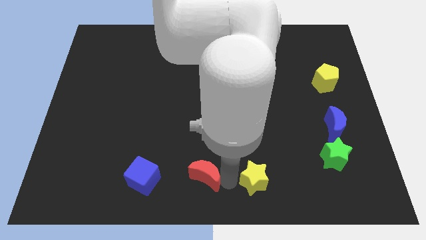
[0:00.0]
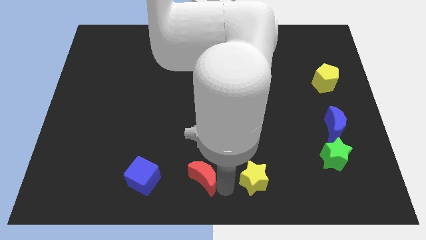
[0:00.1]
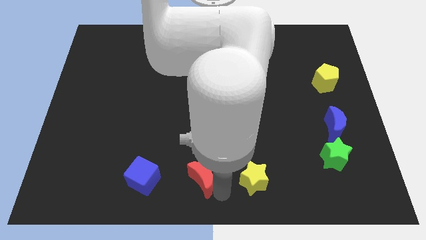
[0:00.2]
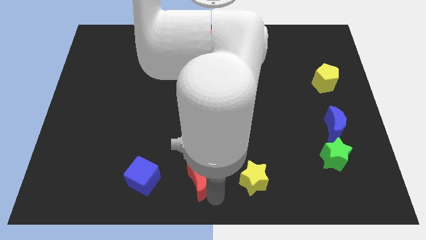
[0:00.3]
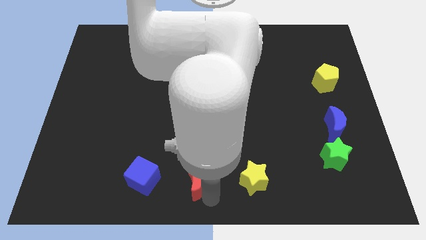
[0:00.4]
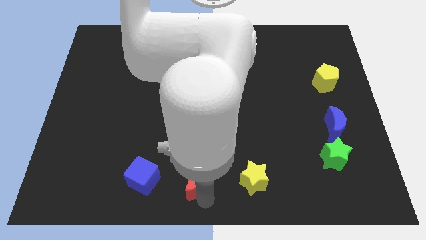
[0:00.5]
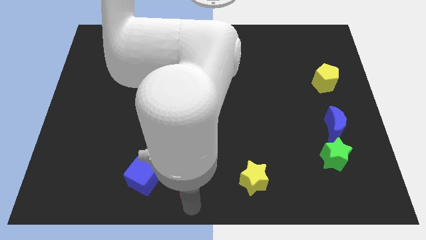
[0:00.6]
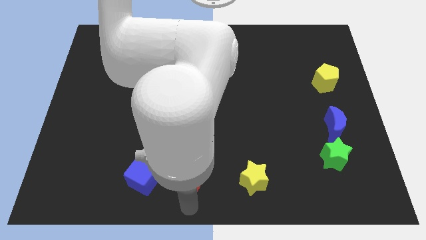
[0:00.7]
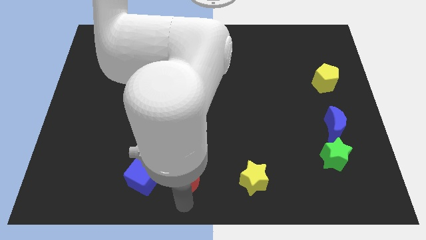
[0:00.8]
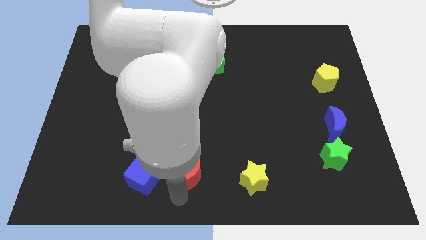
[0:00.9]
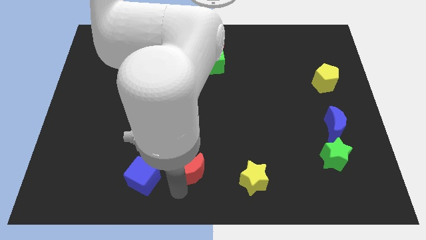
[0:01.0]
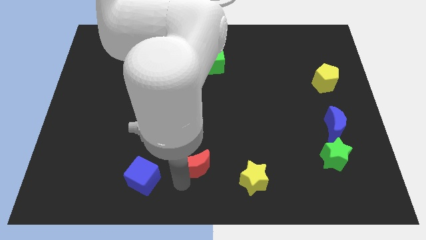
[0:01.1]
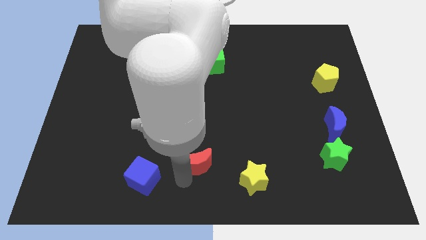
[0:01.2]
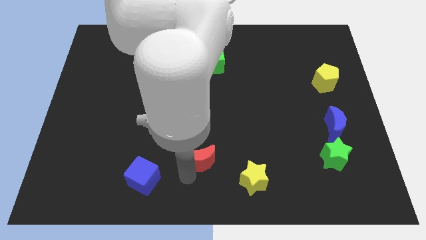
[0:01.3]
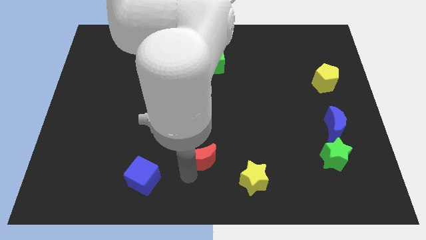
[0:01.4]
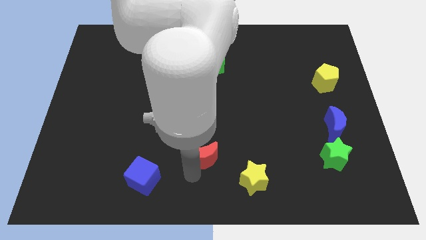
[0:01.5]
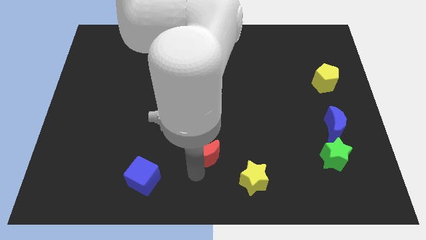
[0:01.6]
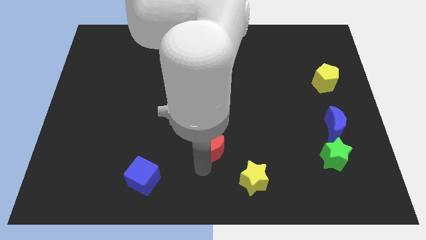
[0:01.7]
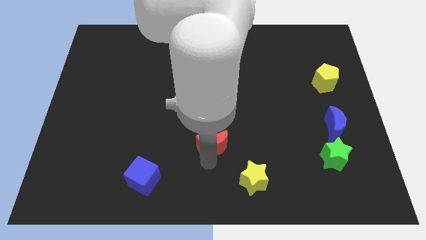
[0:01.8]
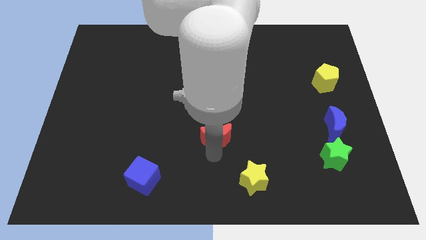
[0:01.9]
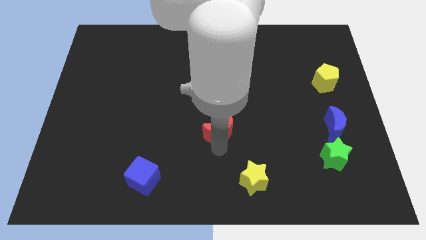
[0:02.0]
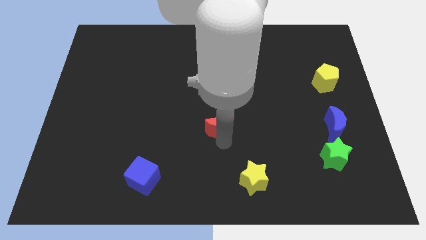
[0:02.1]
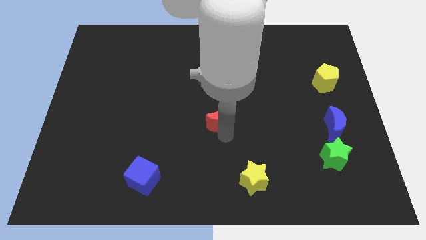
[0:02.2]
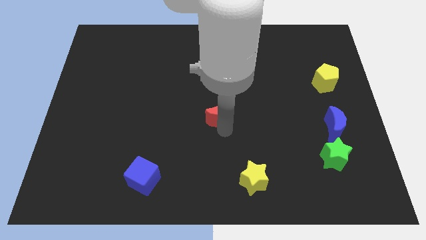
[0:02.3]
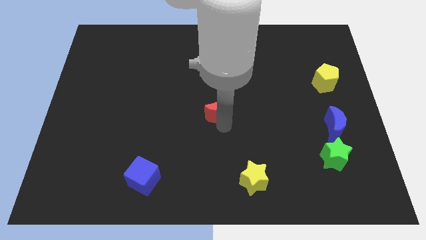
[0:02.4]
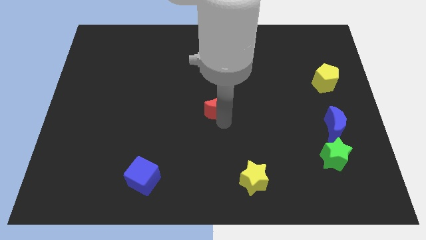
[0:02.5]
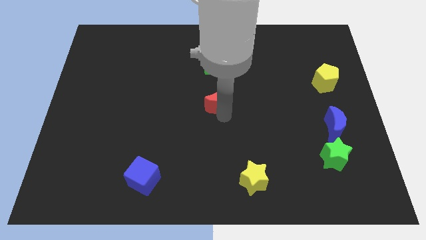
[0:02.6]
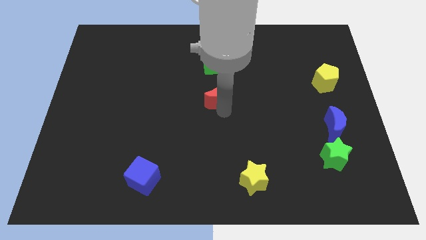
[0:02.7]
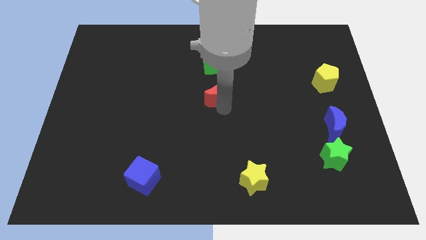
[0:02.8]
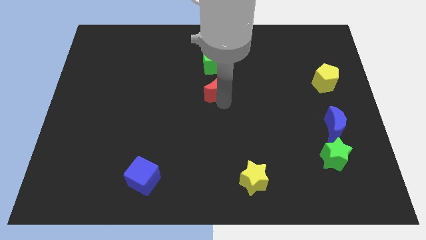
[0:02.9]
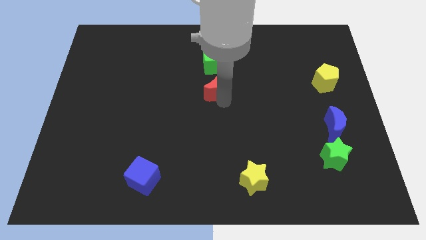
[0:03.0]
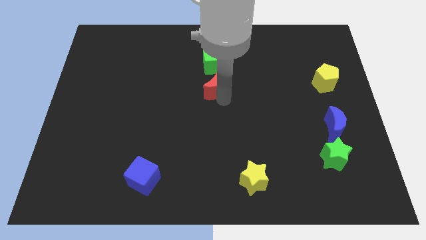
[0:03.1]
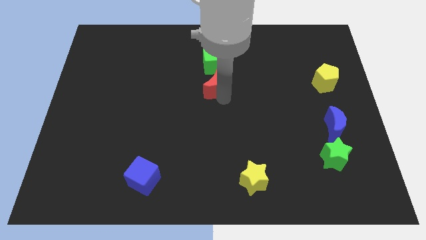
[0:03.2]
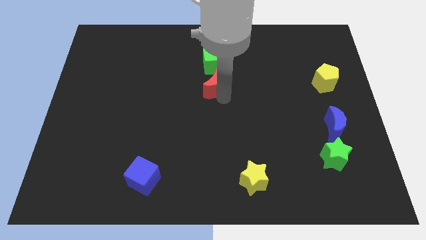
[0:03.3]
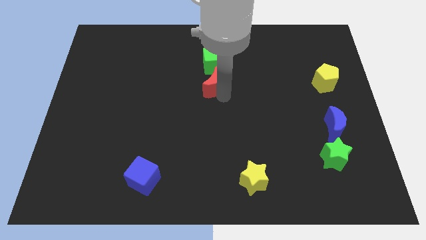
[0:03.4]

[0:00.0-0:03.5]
push the red crescent to the bottom of the green cube

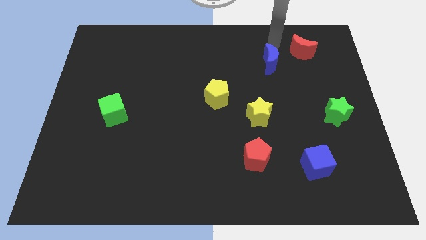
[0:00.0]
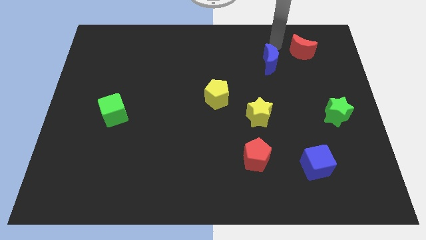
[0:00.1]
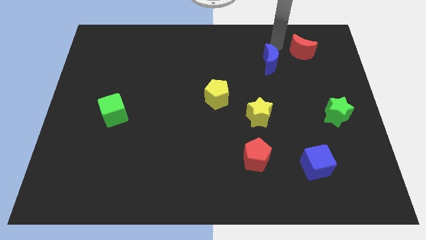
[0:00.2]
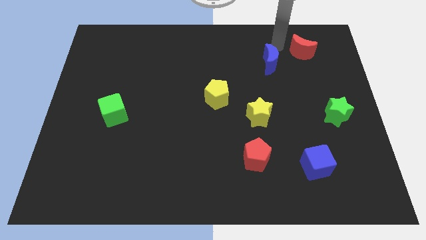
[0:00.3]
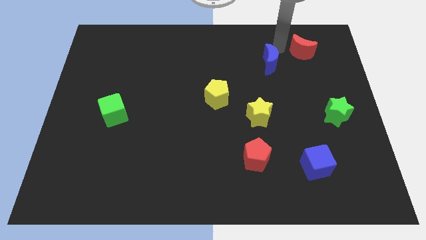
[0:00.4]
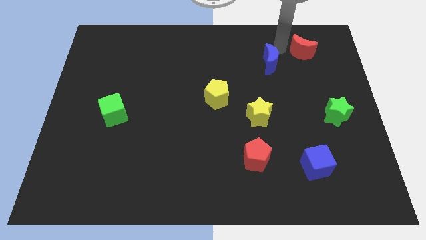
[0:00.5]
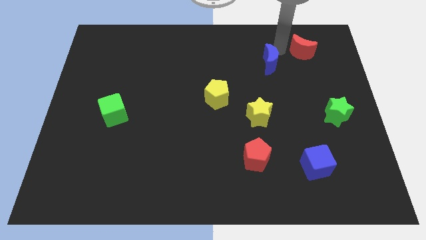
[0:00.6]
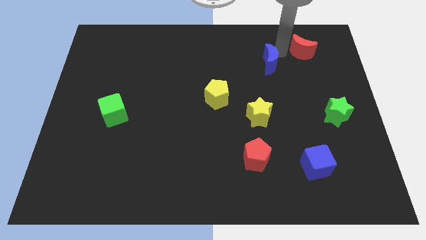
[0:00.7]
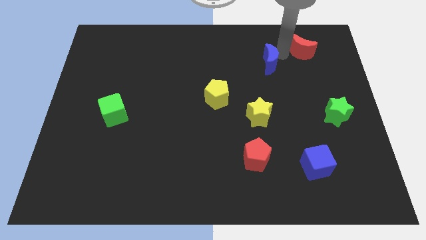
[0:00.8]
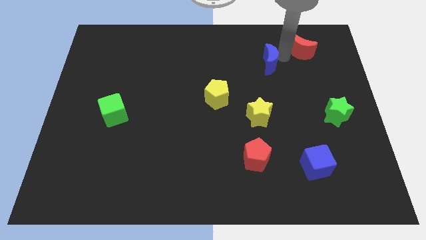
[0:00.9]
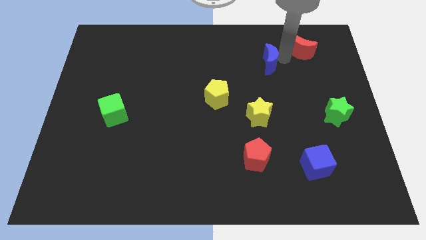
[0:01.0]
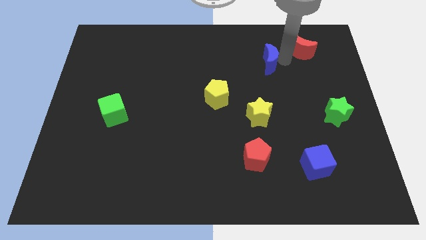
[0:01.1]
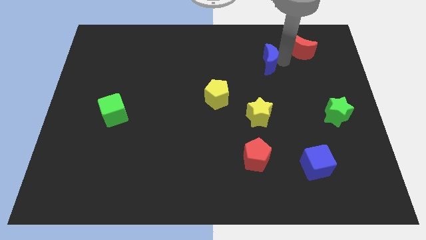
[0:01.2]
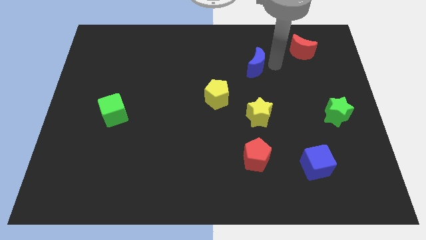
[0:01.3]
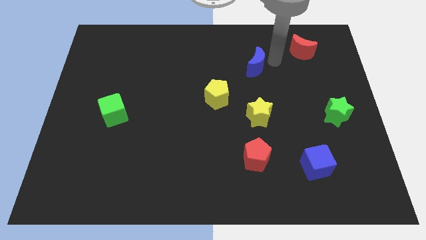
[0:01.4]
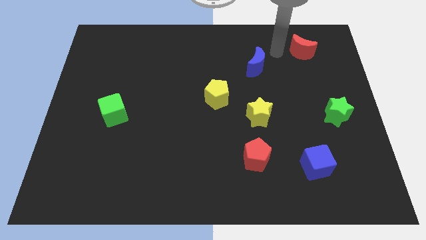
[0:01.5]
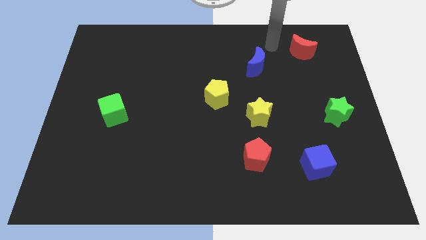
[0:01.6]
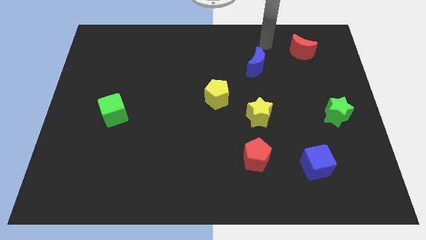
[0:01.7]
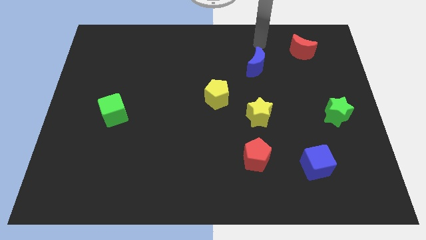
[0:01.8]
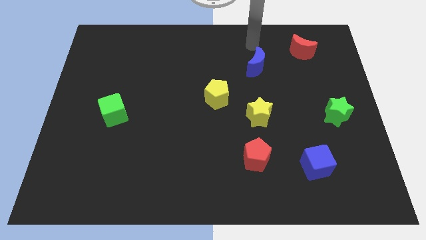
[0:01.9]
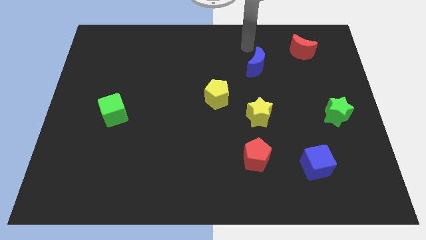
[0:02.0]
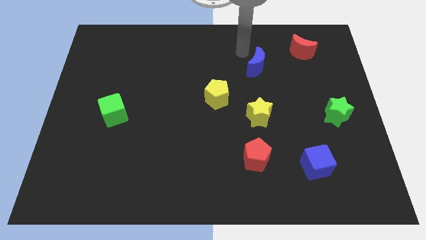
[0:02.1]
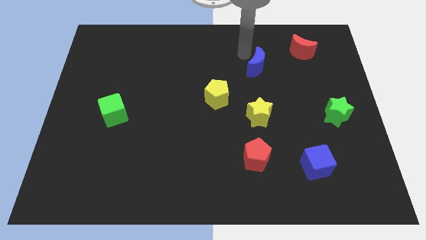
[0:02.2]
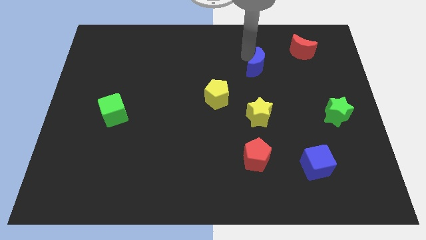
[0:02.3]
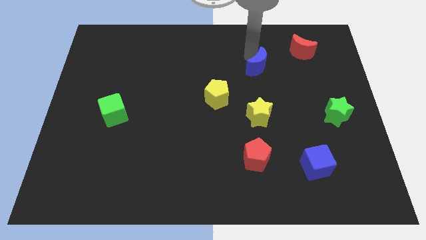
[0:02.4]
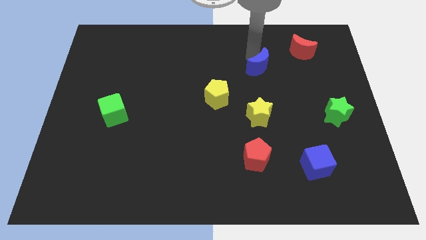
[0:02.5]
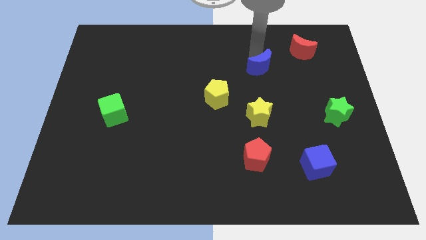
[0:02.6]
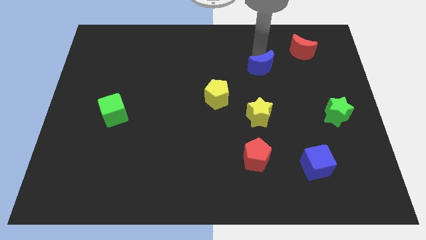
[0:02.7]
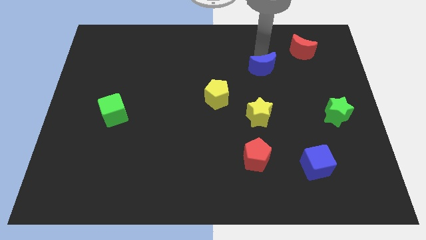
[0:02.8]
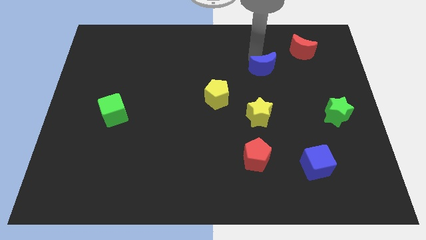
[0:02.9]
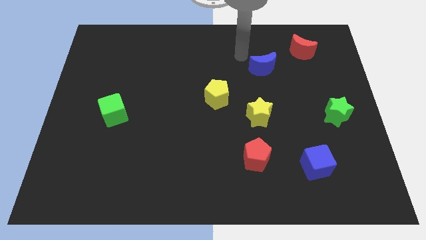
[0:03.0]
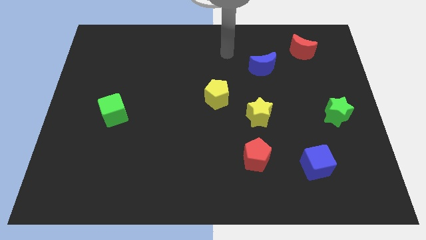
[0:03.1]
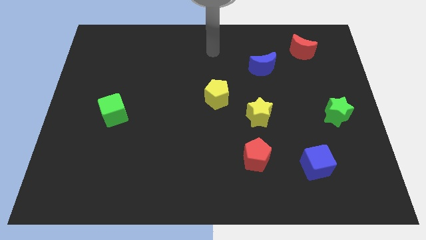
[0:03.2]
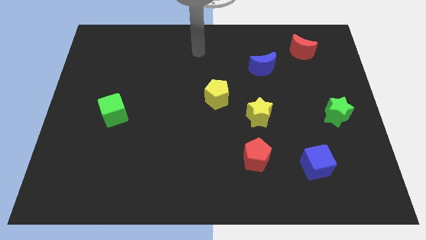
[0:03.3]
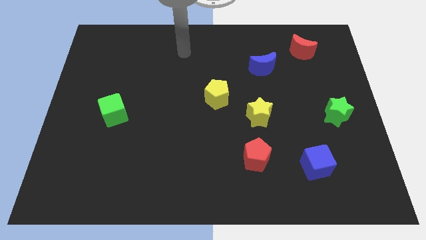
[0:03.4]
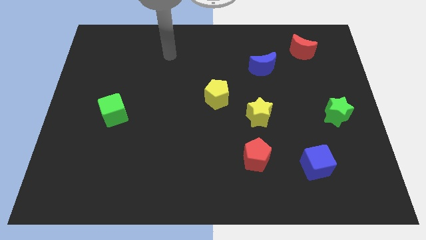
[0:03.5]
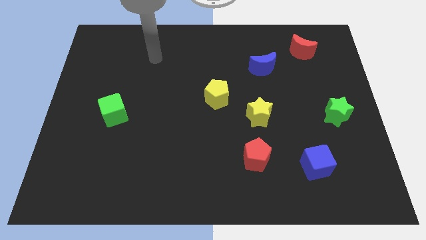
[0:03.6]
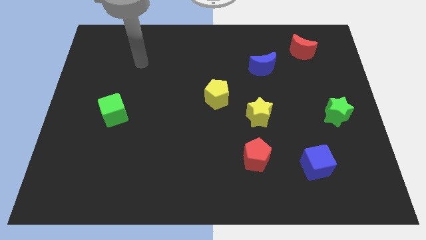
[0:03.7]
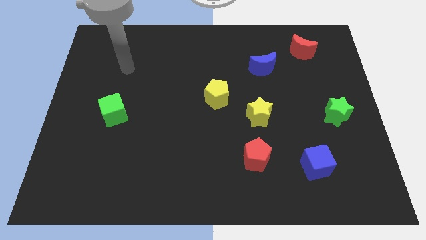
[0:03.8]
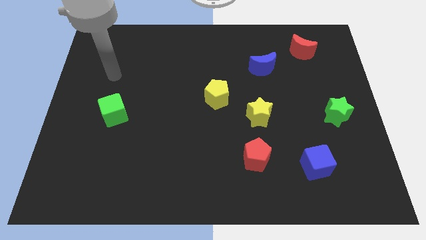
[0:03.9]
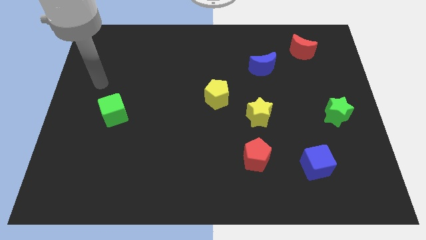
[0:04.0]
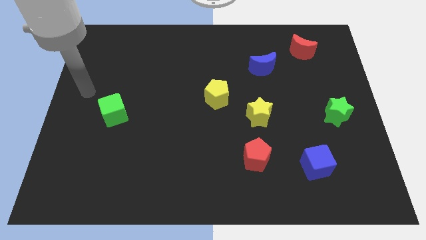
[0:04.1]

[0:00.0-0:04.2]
place blue moon to the top of yellow star

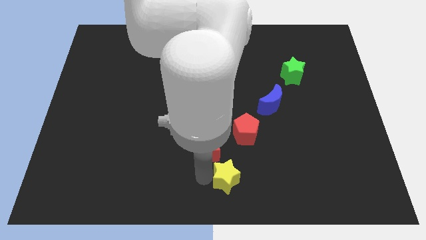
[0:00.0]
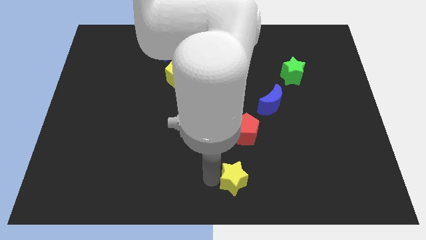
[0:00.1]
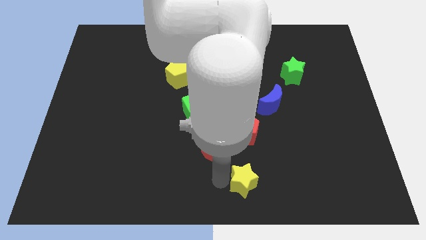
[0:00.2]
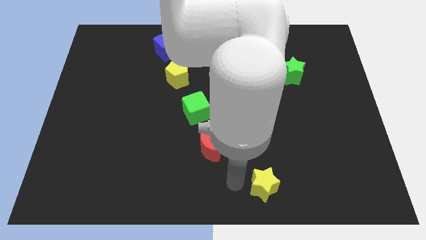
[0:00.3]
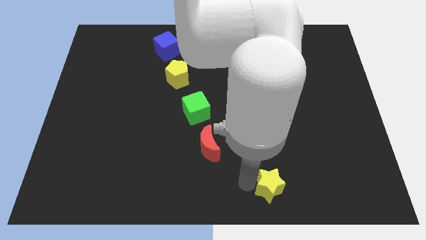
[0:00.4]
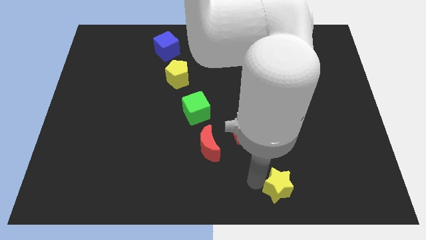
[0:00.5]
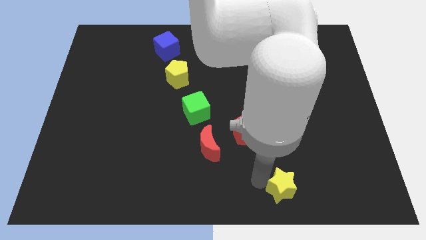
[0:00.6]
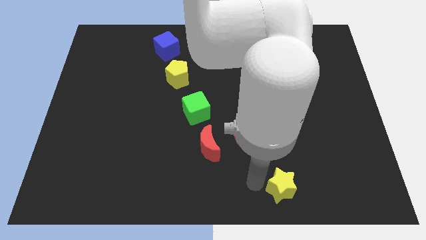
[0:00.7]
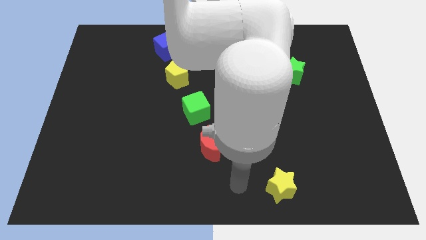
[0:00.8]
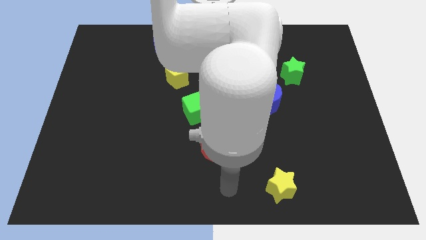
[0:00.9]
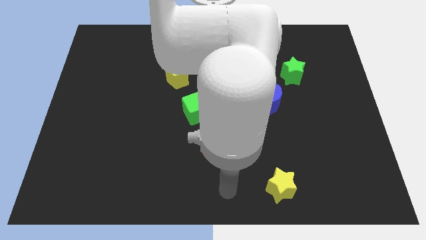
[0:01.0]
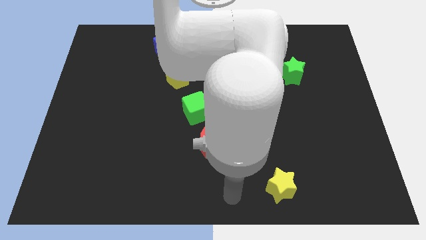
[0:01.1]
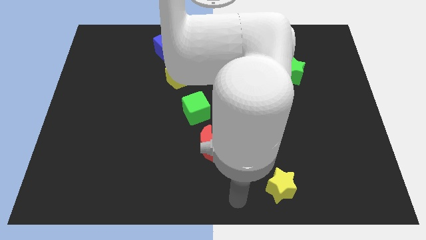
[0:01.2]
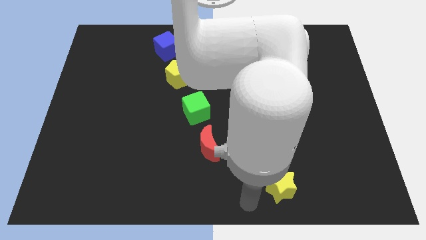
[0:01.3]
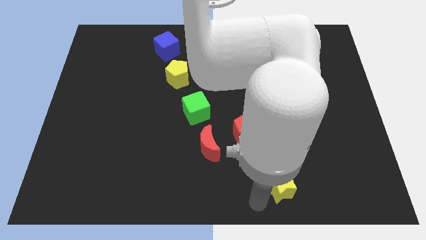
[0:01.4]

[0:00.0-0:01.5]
move yellow star slightly to the right side
